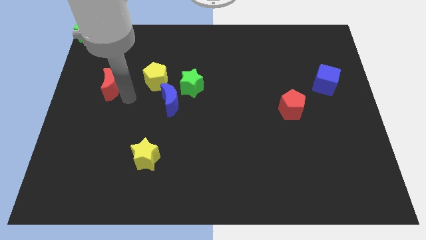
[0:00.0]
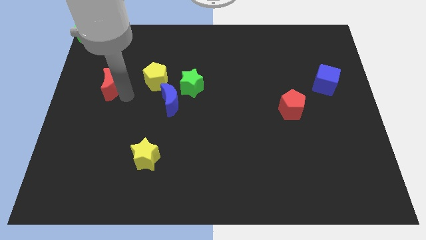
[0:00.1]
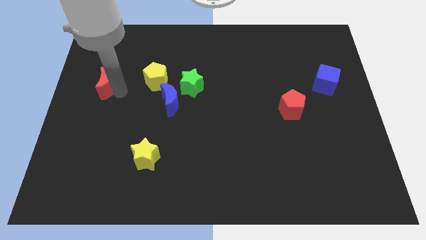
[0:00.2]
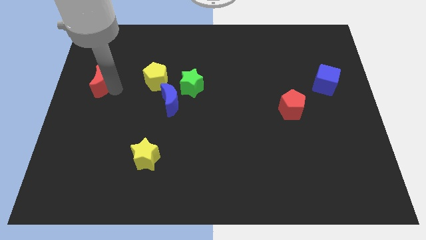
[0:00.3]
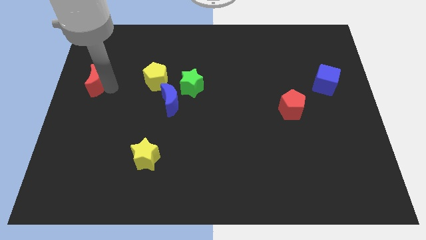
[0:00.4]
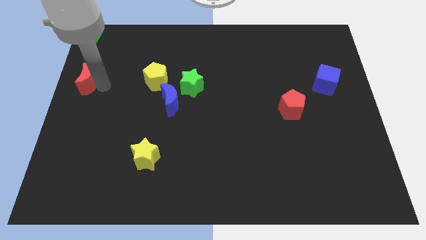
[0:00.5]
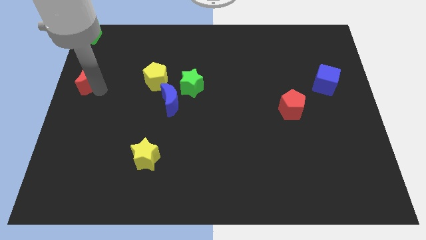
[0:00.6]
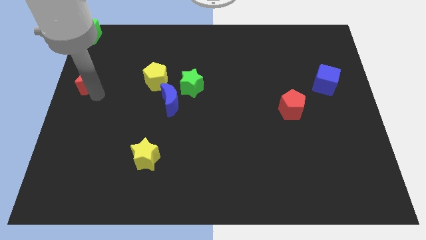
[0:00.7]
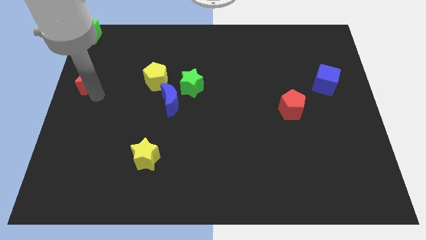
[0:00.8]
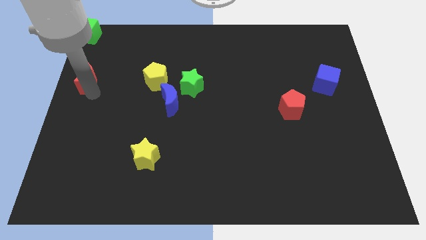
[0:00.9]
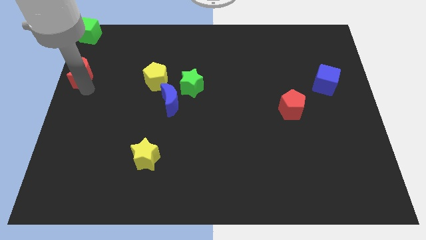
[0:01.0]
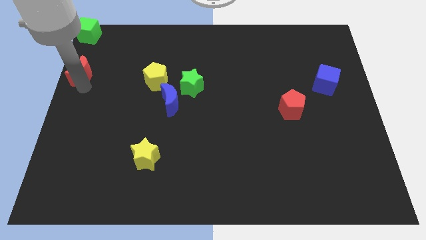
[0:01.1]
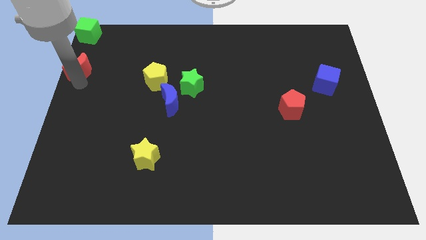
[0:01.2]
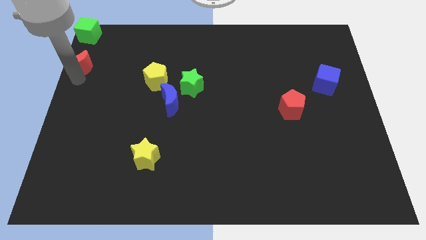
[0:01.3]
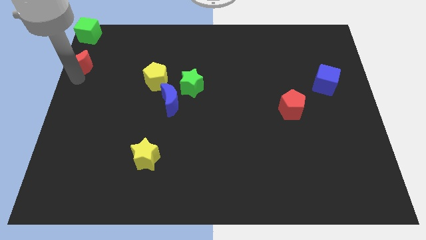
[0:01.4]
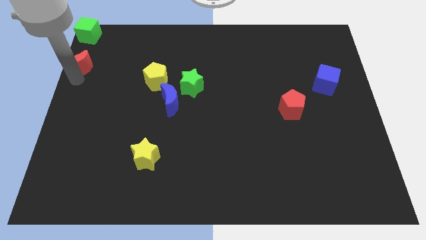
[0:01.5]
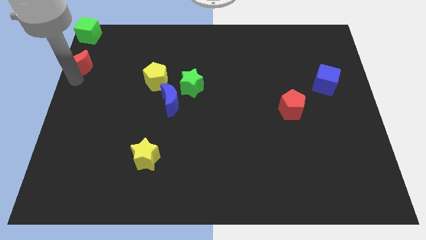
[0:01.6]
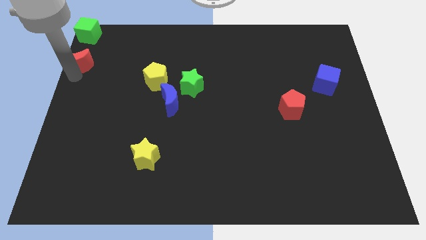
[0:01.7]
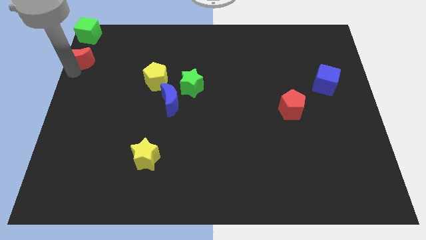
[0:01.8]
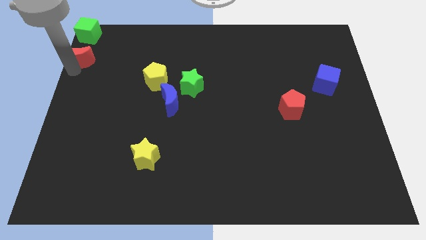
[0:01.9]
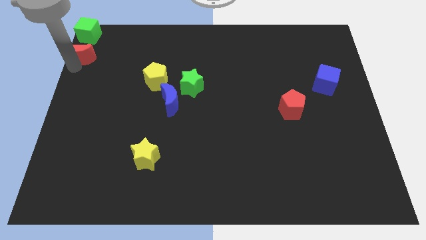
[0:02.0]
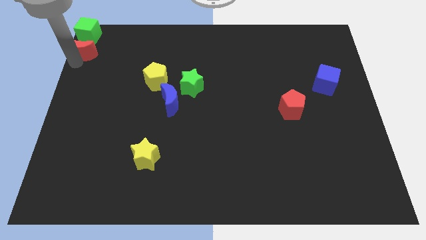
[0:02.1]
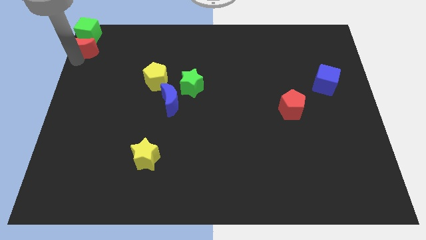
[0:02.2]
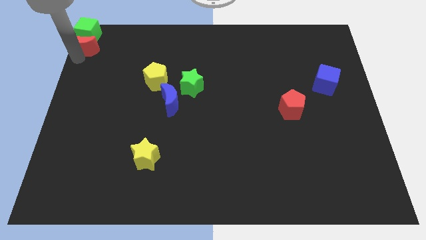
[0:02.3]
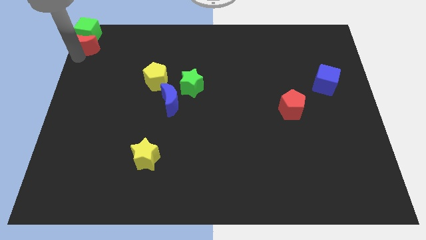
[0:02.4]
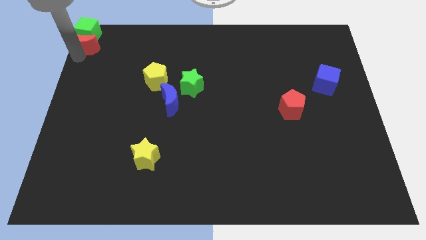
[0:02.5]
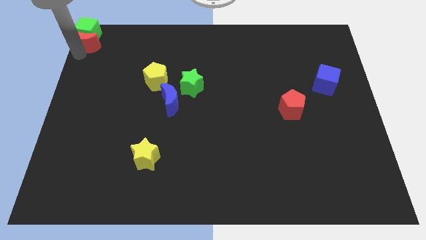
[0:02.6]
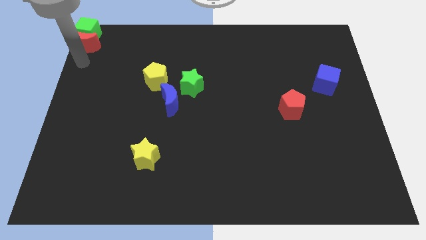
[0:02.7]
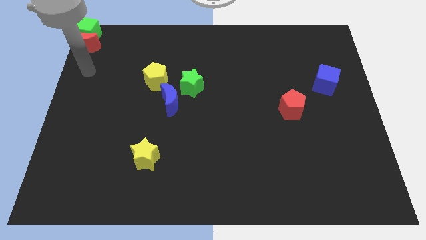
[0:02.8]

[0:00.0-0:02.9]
place red crescent below green cube

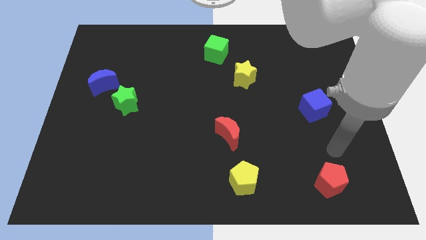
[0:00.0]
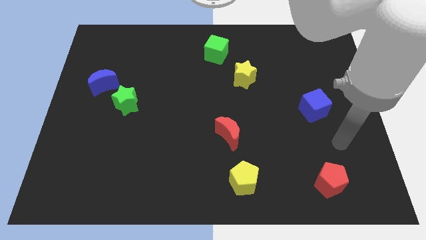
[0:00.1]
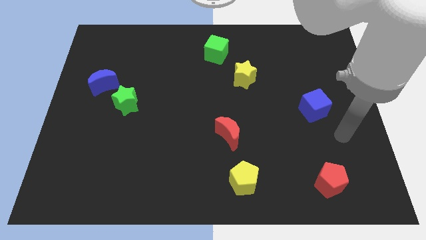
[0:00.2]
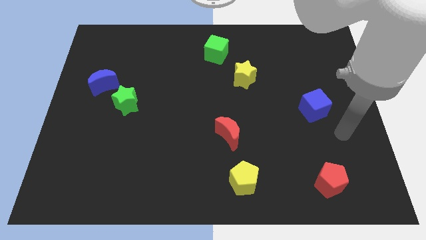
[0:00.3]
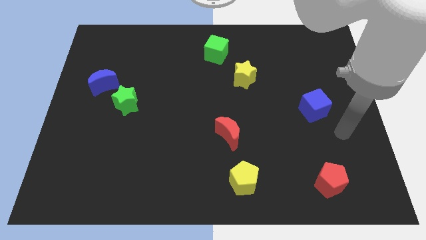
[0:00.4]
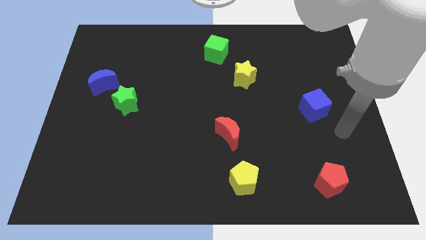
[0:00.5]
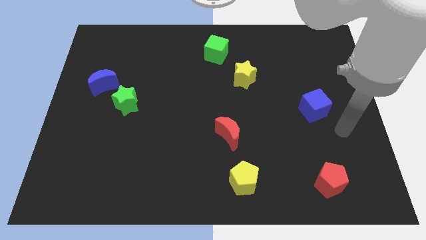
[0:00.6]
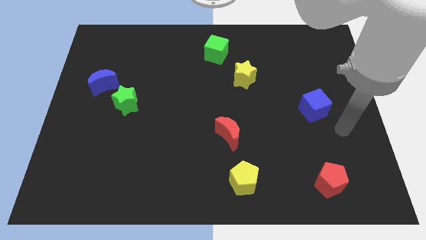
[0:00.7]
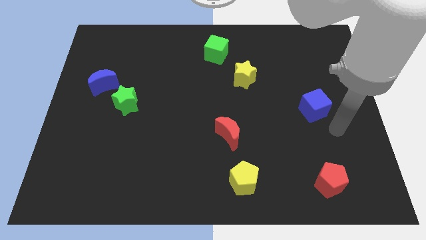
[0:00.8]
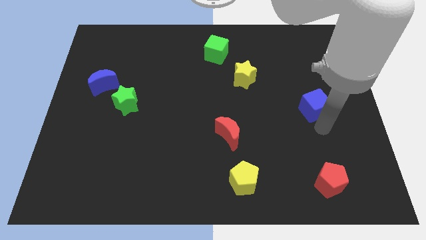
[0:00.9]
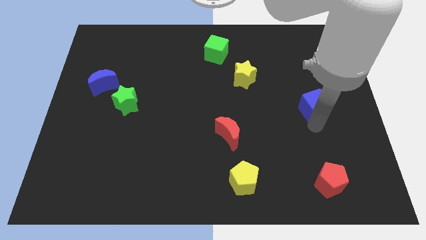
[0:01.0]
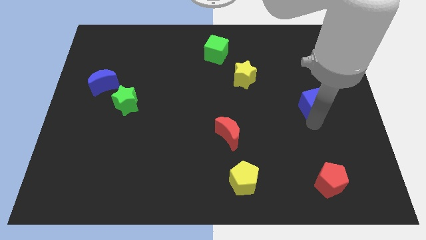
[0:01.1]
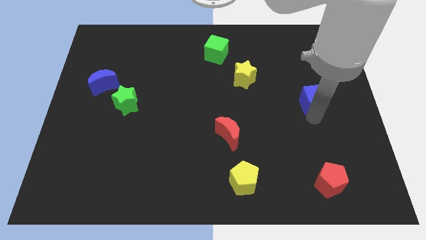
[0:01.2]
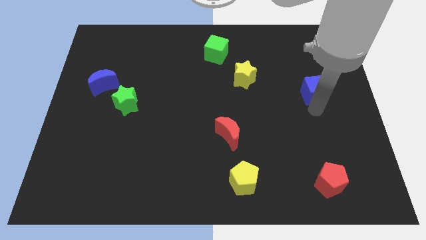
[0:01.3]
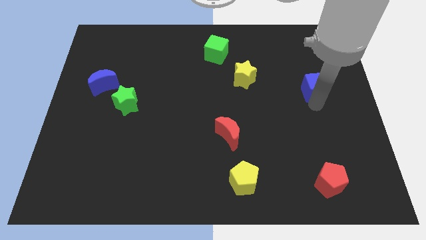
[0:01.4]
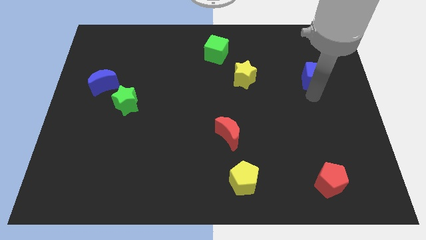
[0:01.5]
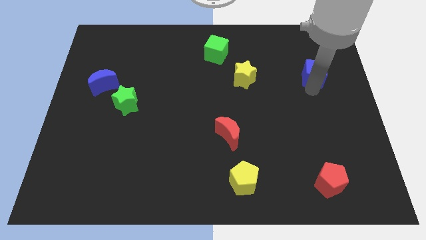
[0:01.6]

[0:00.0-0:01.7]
push the blue upwards to the horizontal right side of the yellow star

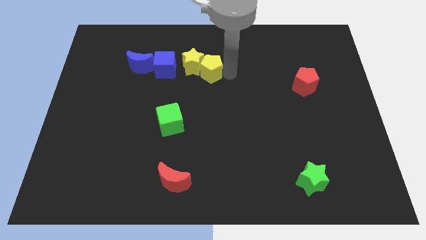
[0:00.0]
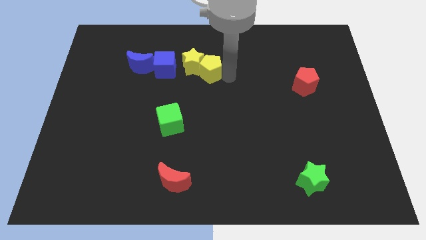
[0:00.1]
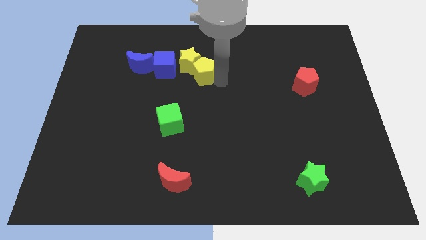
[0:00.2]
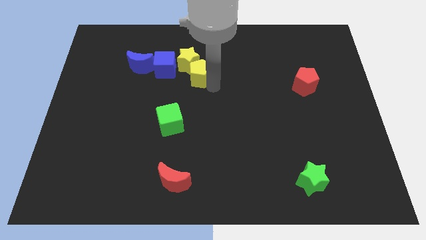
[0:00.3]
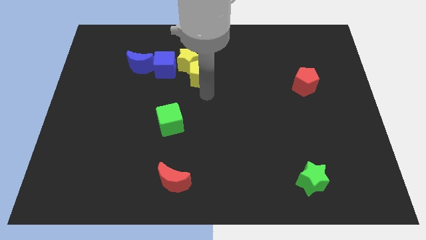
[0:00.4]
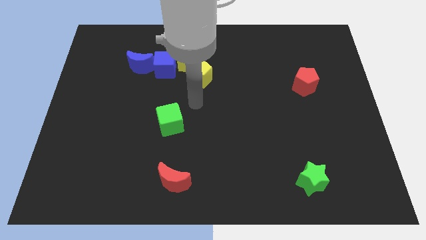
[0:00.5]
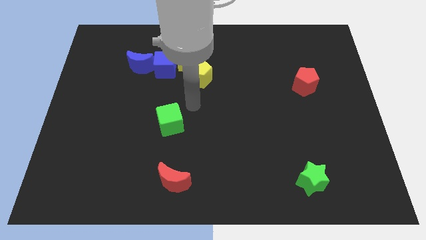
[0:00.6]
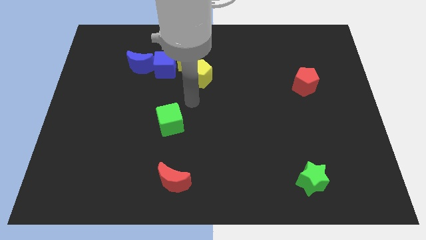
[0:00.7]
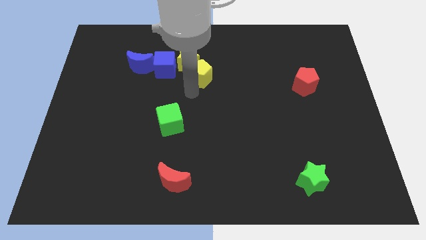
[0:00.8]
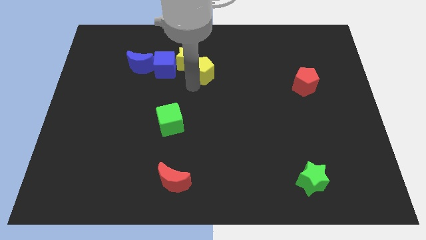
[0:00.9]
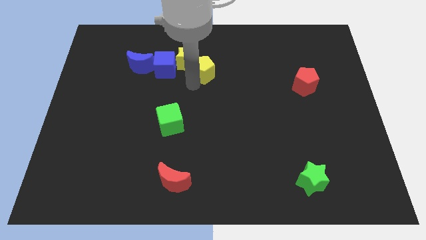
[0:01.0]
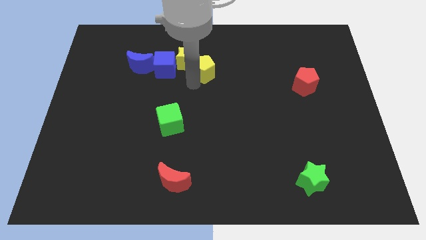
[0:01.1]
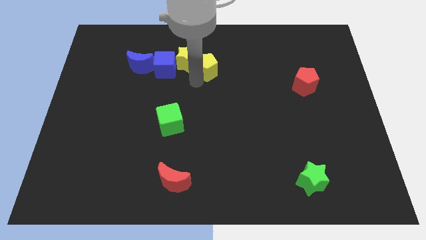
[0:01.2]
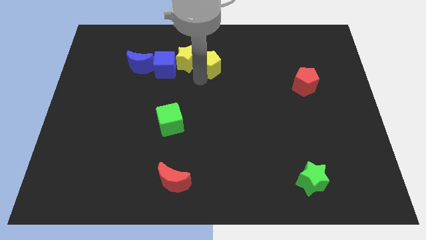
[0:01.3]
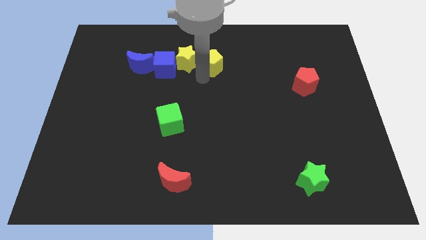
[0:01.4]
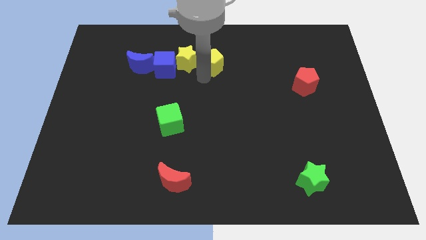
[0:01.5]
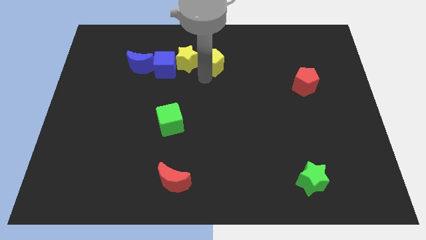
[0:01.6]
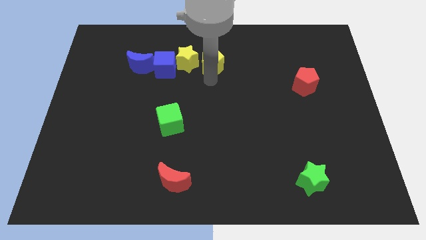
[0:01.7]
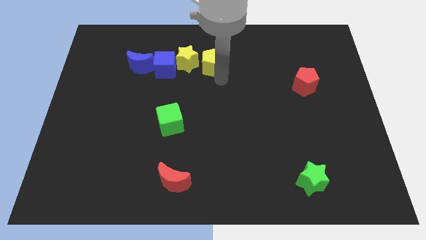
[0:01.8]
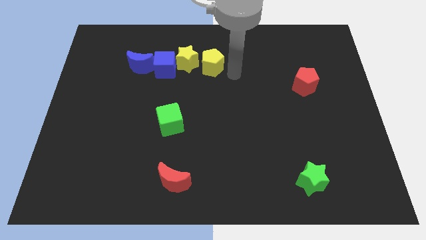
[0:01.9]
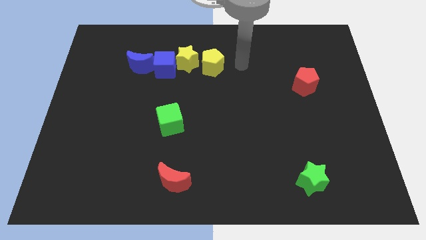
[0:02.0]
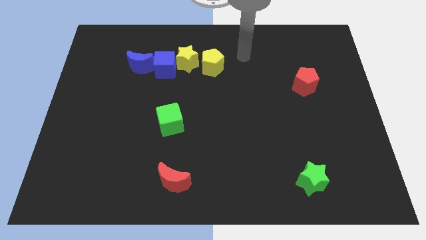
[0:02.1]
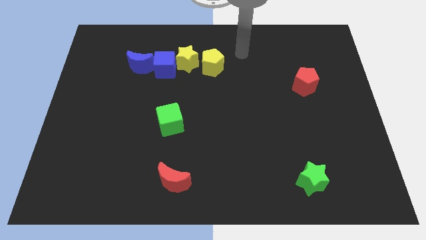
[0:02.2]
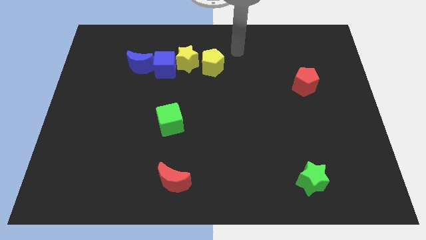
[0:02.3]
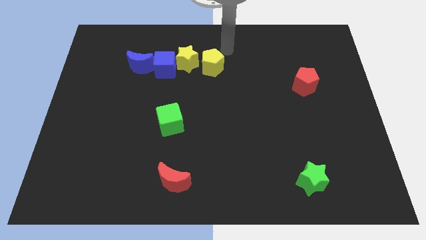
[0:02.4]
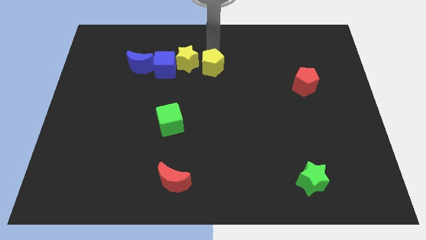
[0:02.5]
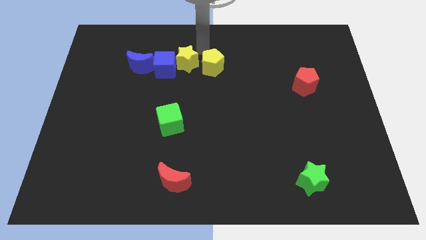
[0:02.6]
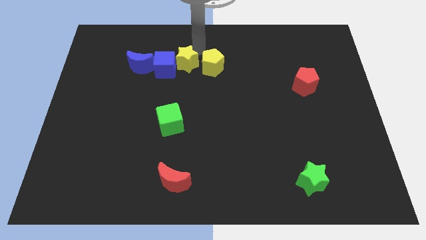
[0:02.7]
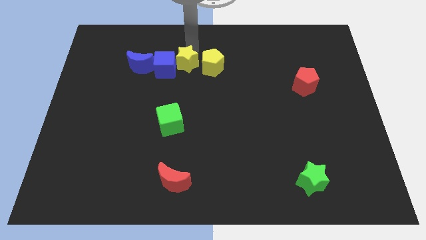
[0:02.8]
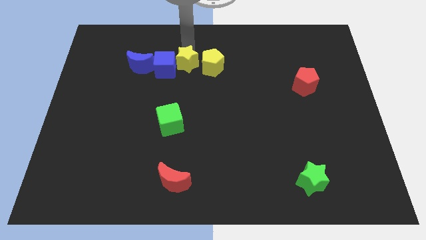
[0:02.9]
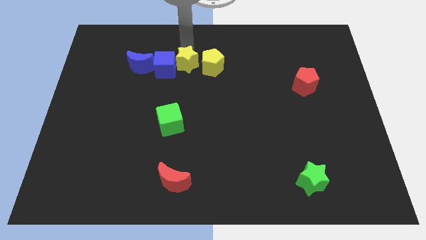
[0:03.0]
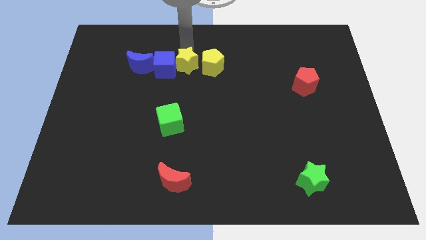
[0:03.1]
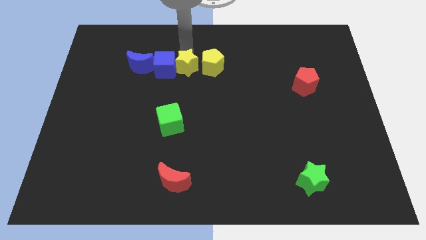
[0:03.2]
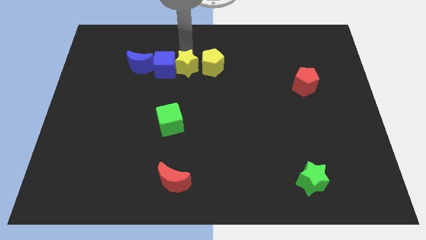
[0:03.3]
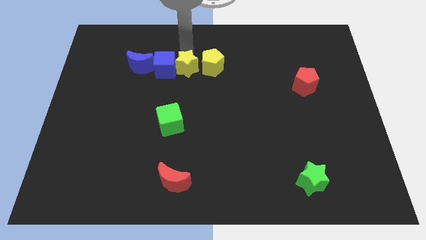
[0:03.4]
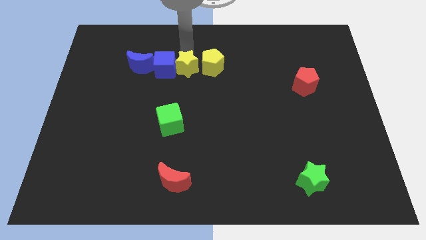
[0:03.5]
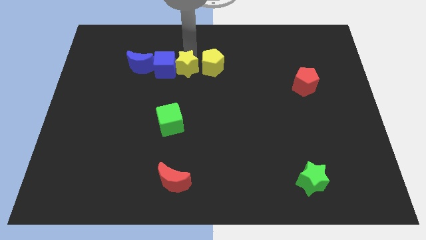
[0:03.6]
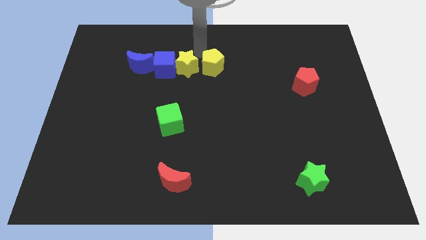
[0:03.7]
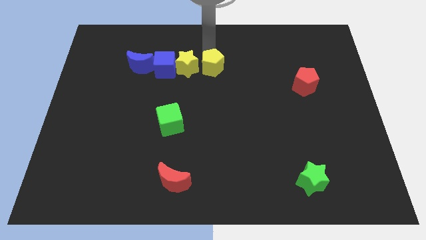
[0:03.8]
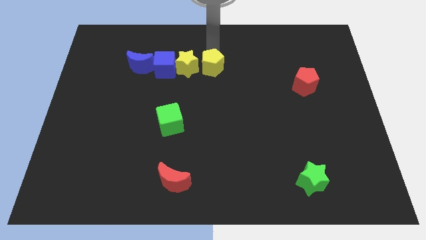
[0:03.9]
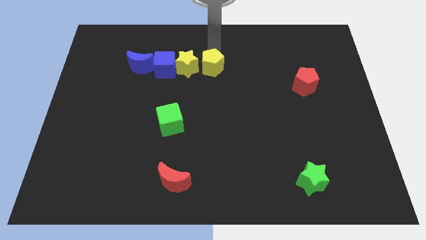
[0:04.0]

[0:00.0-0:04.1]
adjust the yellow blocks to right of blue cube

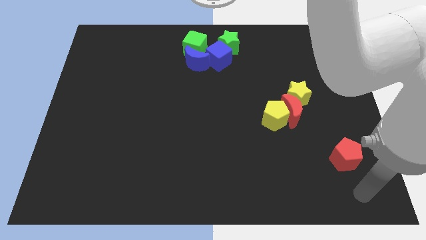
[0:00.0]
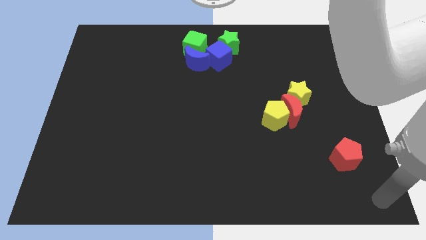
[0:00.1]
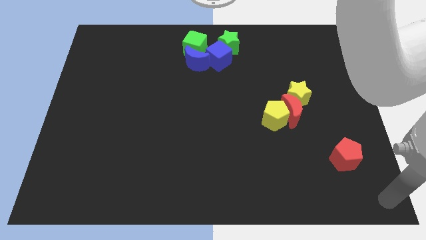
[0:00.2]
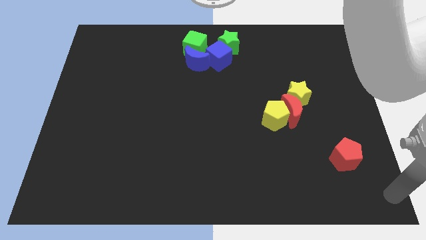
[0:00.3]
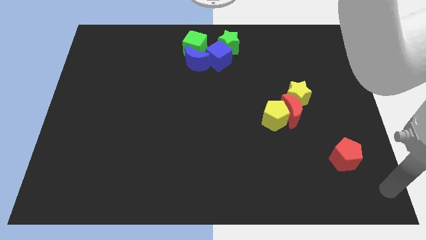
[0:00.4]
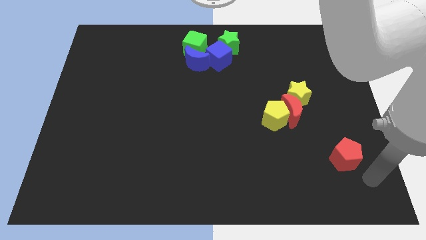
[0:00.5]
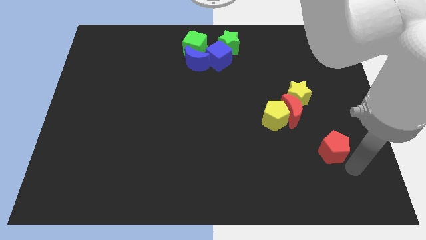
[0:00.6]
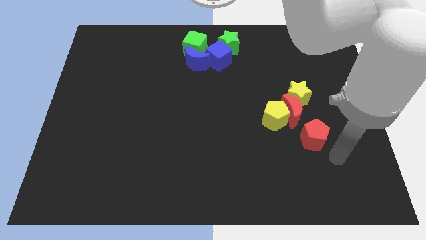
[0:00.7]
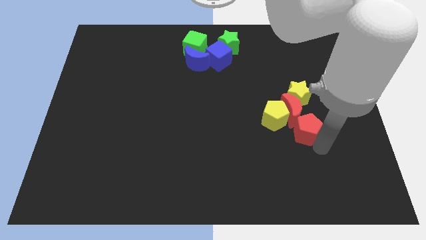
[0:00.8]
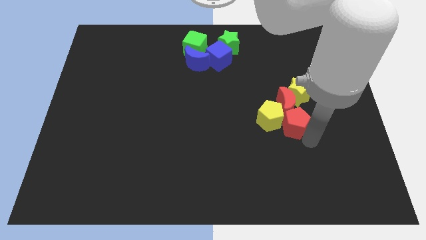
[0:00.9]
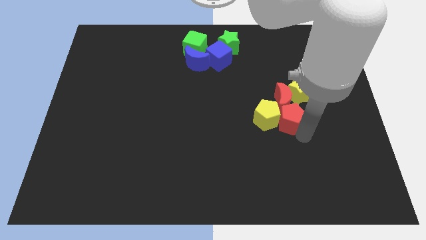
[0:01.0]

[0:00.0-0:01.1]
push the red pentagon into the bottom of the red crescent
